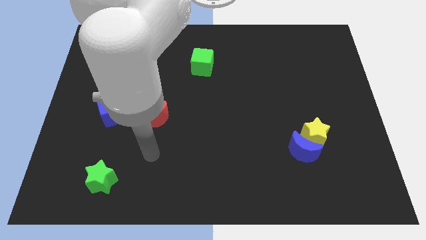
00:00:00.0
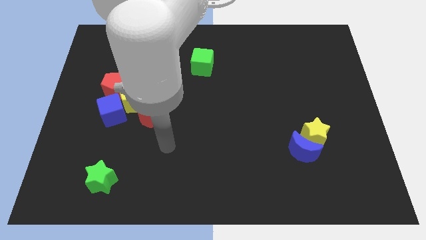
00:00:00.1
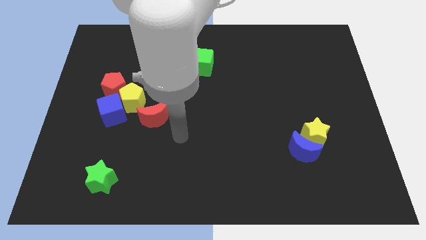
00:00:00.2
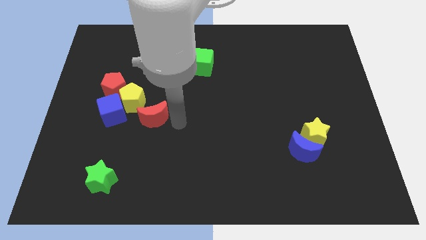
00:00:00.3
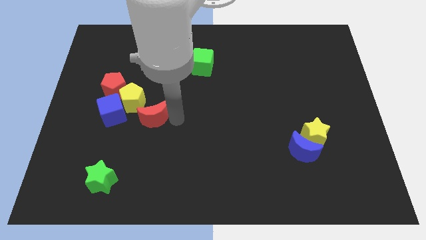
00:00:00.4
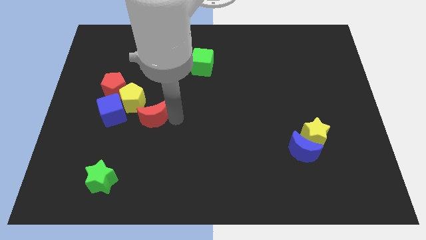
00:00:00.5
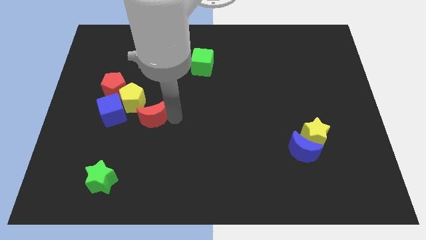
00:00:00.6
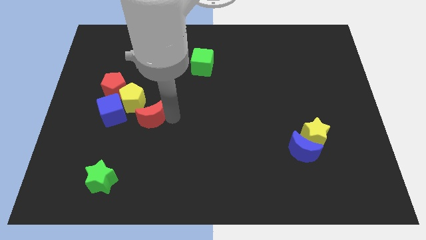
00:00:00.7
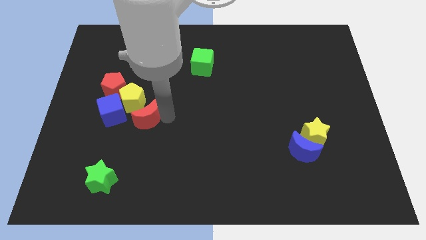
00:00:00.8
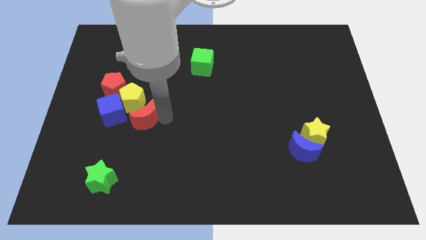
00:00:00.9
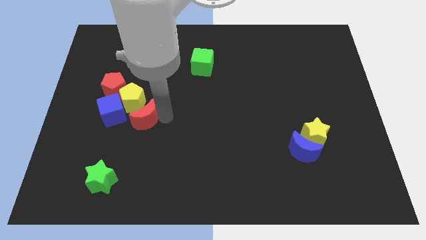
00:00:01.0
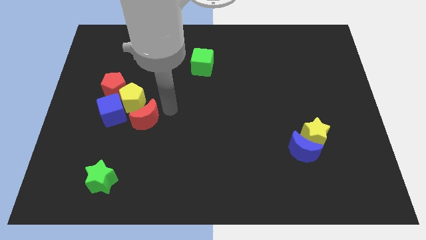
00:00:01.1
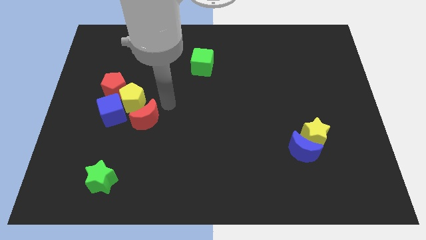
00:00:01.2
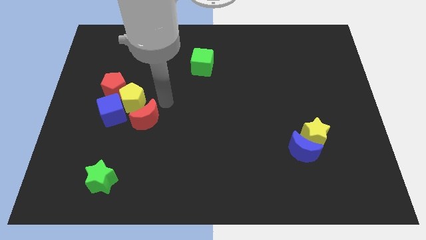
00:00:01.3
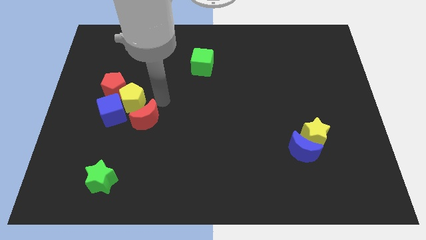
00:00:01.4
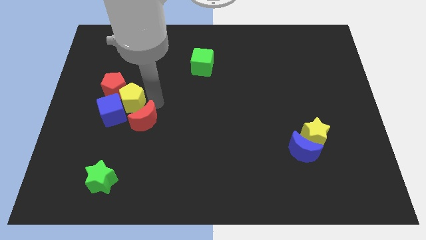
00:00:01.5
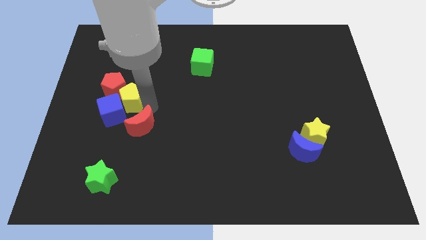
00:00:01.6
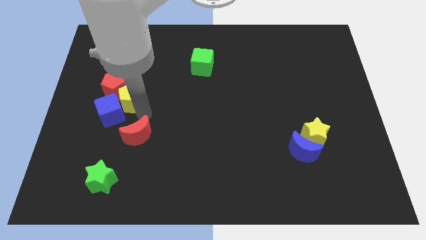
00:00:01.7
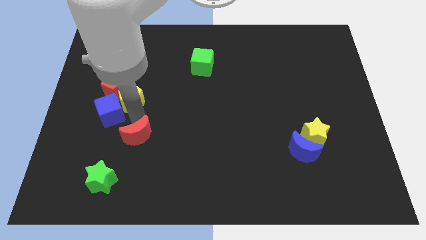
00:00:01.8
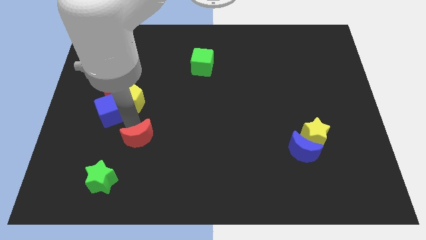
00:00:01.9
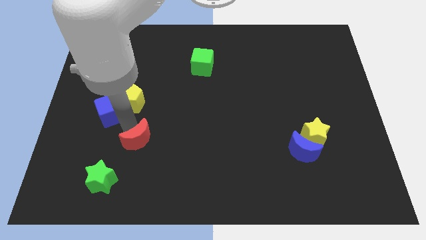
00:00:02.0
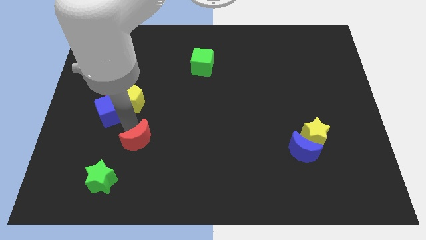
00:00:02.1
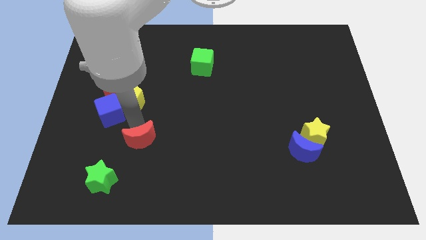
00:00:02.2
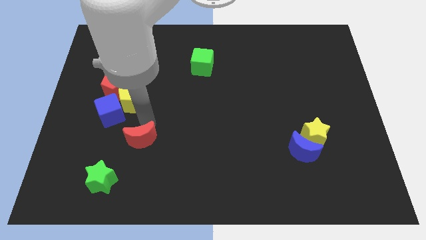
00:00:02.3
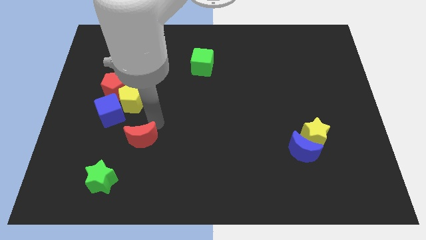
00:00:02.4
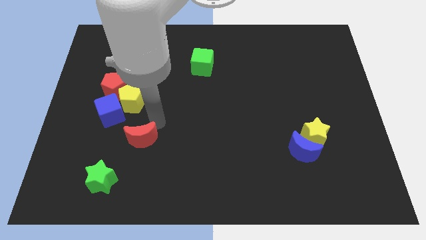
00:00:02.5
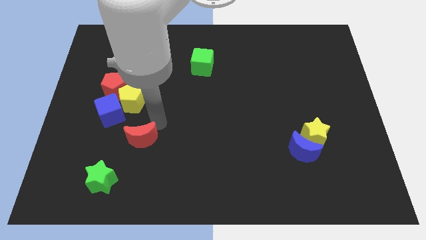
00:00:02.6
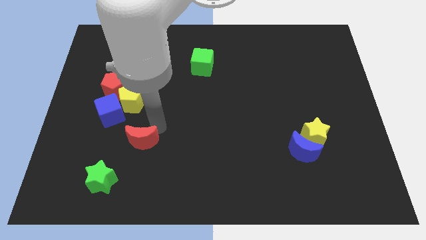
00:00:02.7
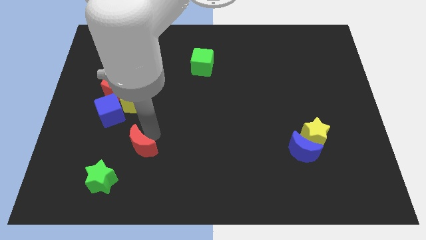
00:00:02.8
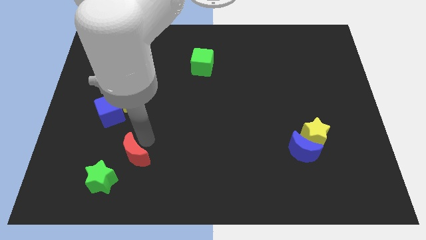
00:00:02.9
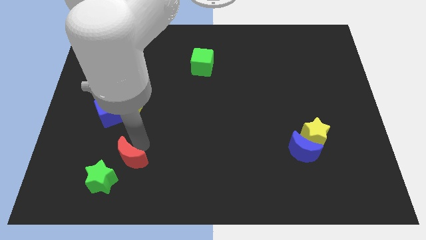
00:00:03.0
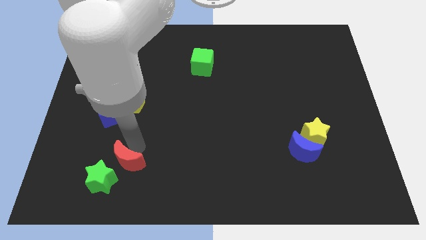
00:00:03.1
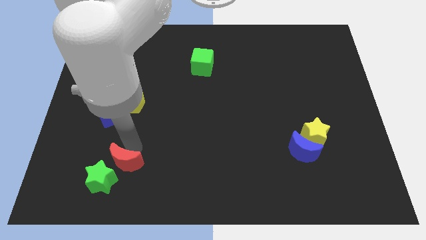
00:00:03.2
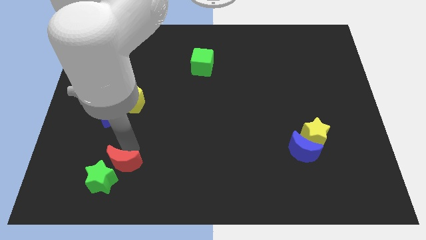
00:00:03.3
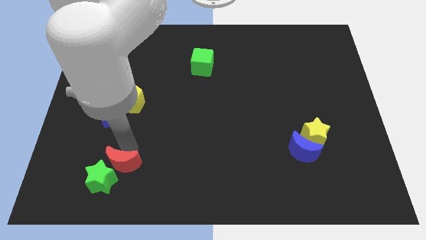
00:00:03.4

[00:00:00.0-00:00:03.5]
push the red moon above green star

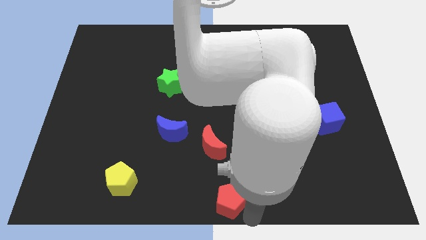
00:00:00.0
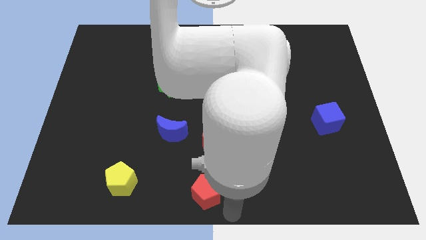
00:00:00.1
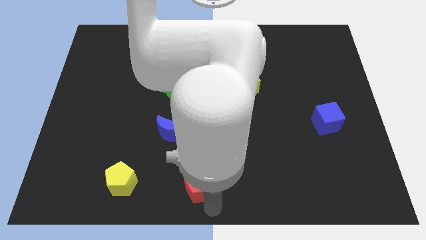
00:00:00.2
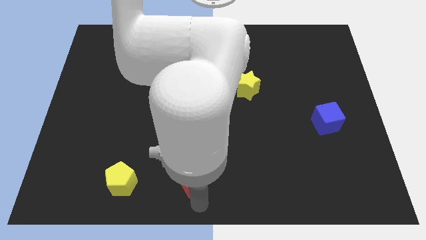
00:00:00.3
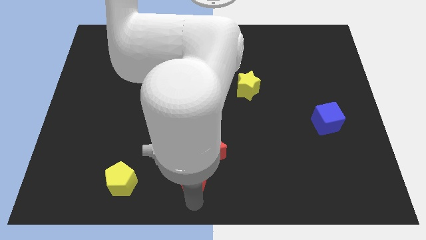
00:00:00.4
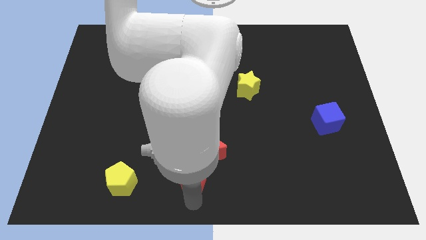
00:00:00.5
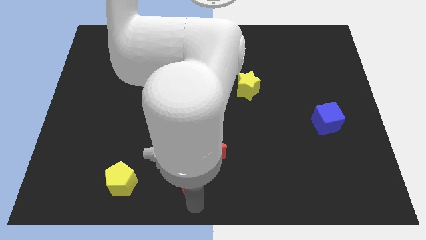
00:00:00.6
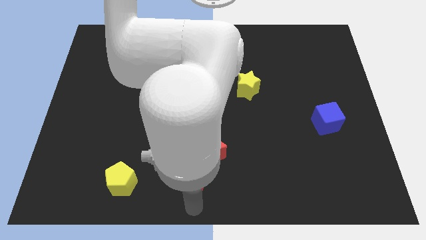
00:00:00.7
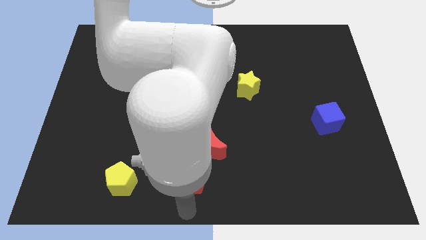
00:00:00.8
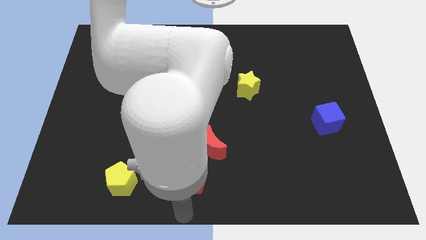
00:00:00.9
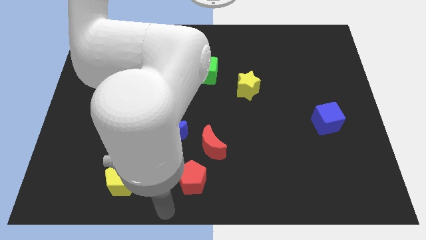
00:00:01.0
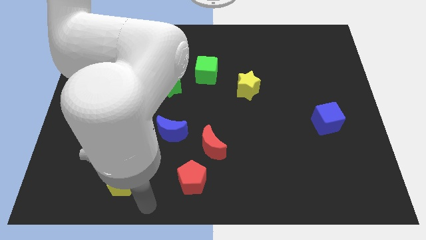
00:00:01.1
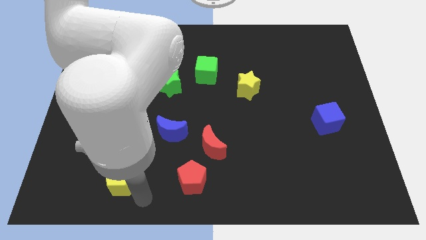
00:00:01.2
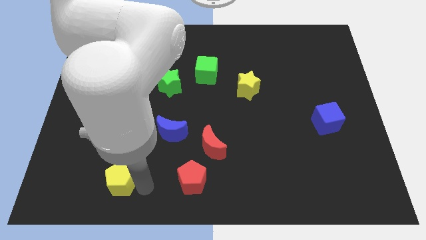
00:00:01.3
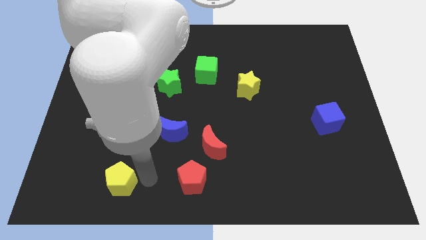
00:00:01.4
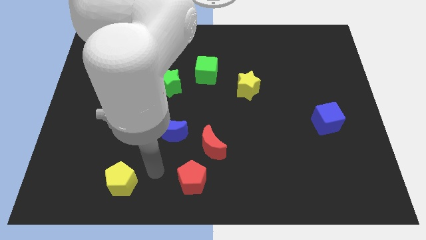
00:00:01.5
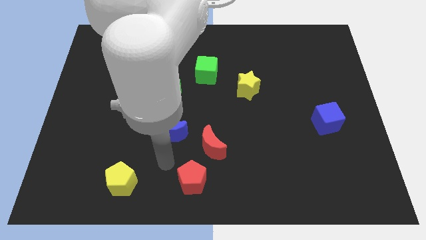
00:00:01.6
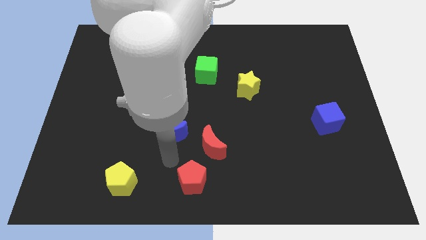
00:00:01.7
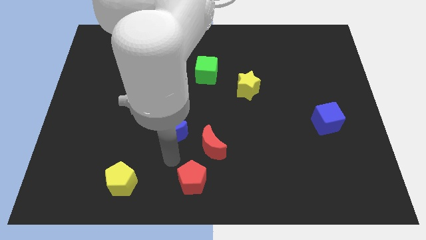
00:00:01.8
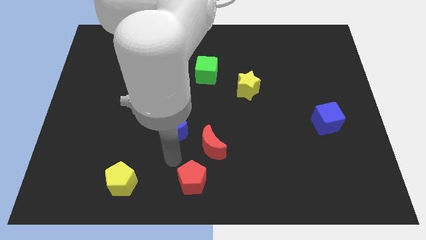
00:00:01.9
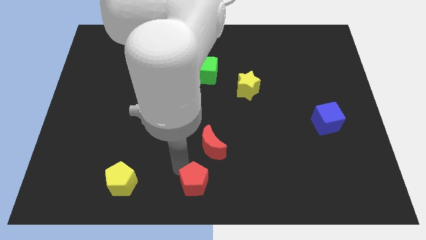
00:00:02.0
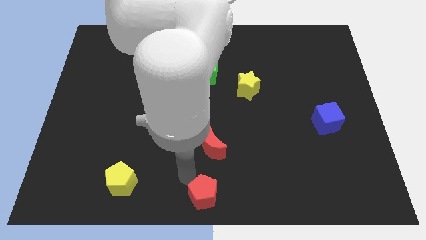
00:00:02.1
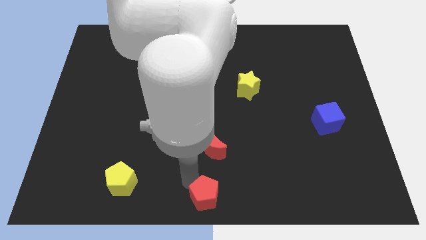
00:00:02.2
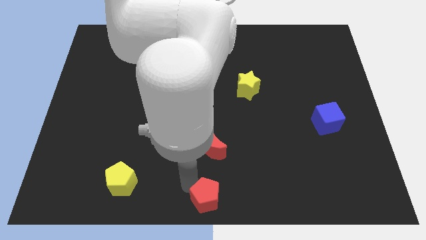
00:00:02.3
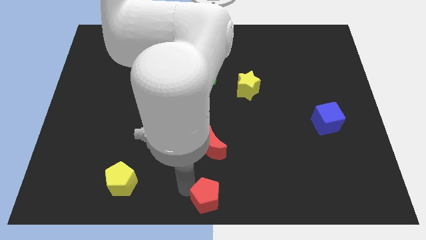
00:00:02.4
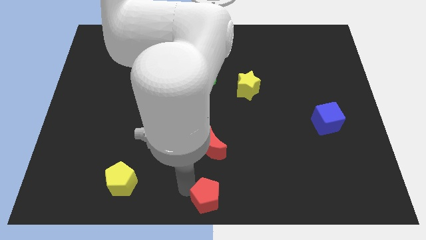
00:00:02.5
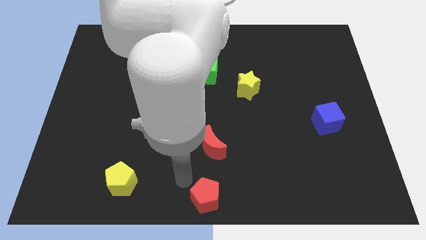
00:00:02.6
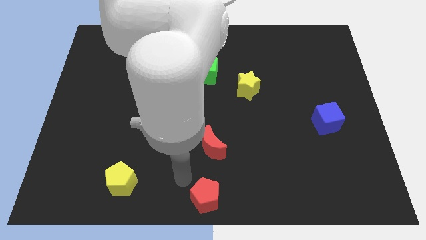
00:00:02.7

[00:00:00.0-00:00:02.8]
put the red pentagon at the bottom of red moon

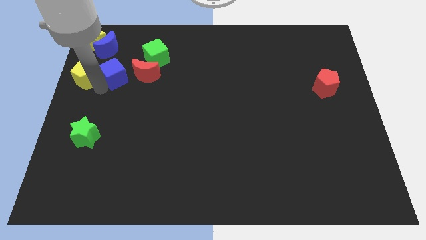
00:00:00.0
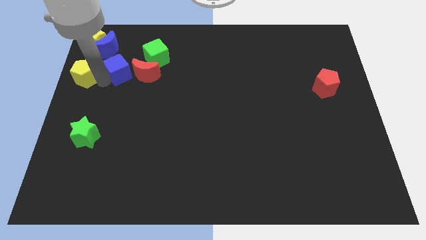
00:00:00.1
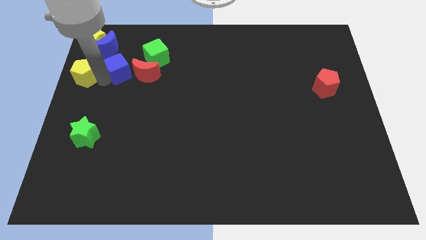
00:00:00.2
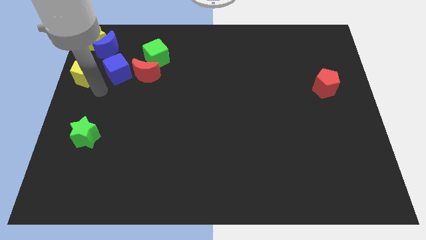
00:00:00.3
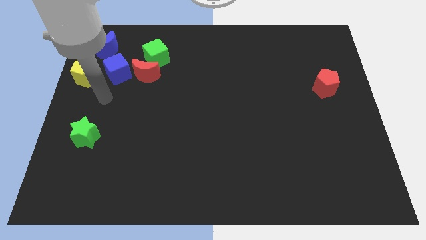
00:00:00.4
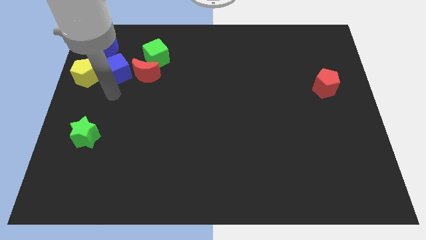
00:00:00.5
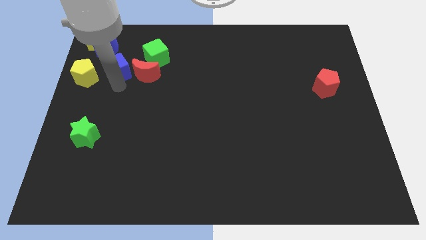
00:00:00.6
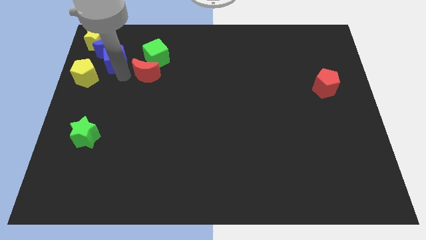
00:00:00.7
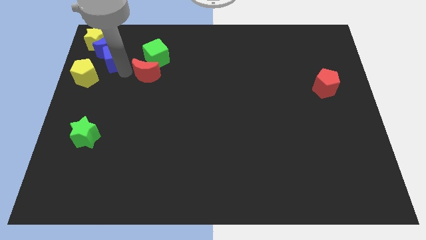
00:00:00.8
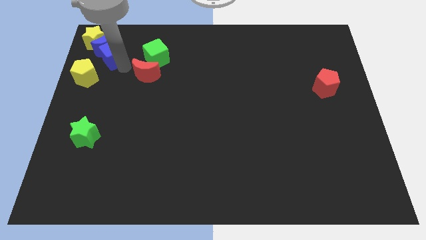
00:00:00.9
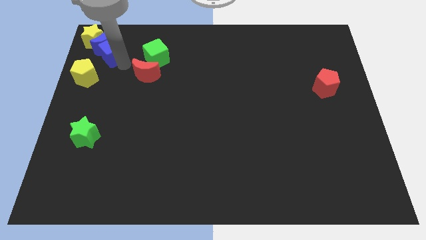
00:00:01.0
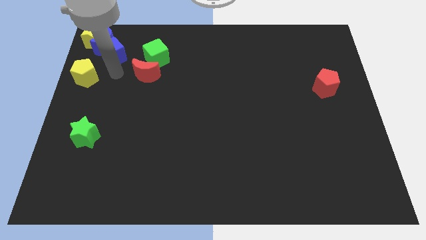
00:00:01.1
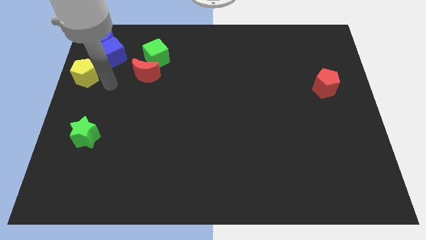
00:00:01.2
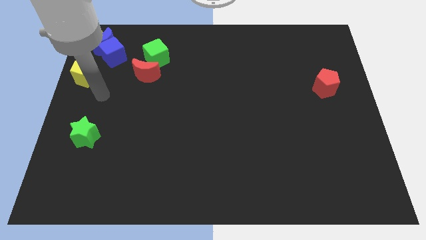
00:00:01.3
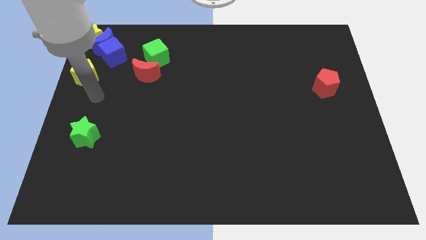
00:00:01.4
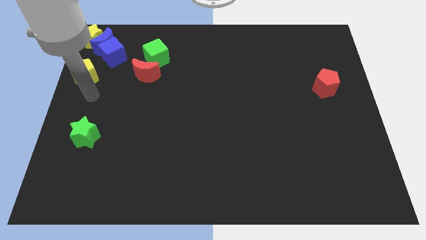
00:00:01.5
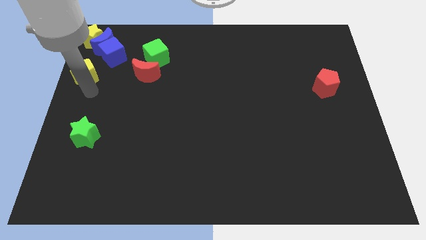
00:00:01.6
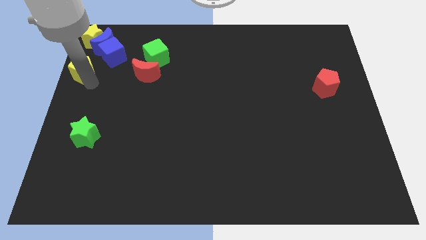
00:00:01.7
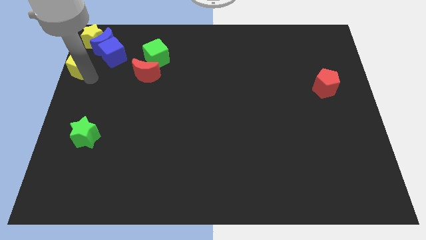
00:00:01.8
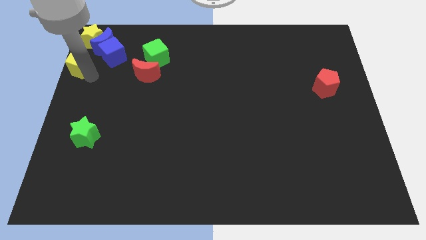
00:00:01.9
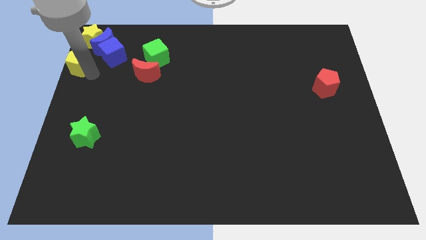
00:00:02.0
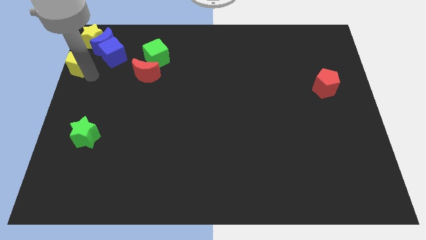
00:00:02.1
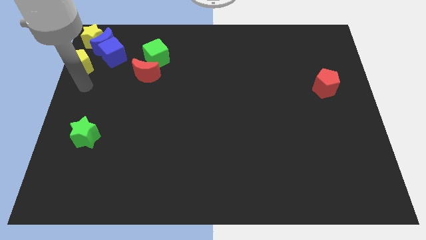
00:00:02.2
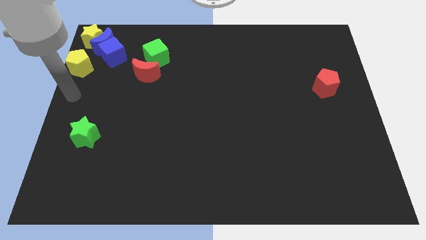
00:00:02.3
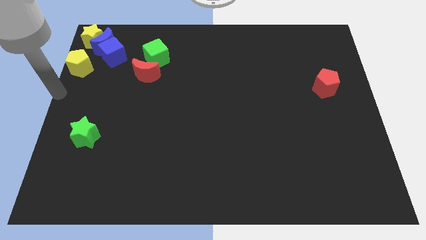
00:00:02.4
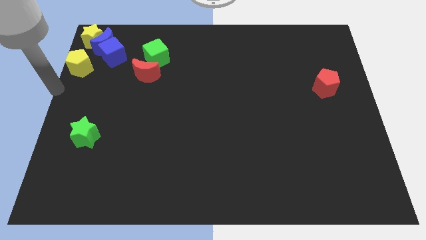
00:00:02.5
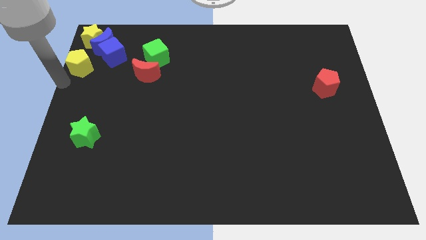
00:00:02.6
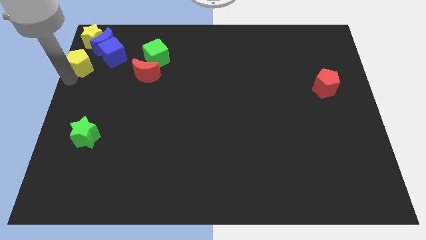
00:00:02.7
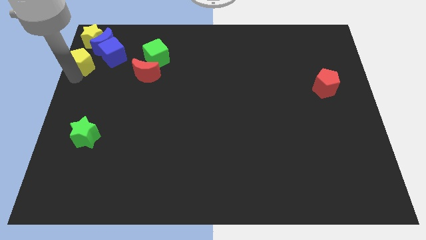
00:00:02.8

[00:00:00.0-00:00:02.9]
move the blue cube into the blue moon
